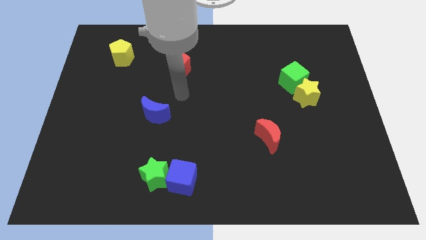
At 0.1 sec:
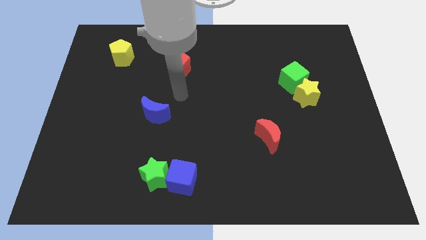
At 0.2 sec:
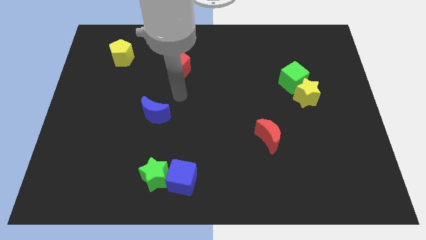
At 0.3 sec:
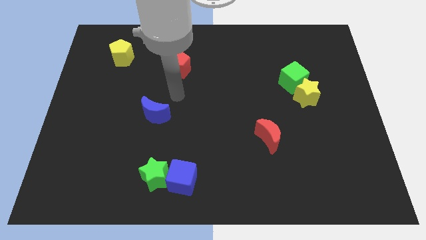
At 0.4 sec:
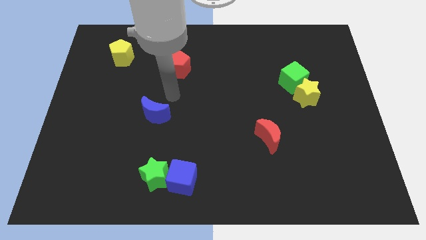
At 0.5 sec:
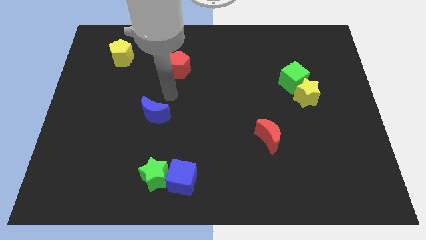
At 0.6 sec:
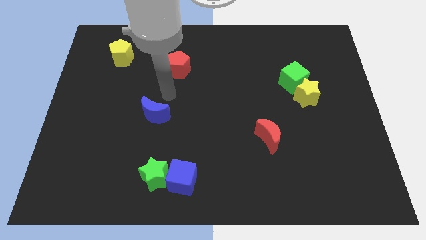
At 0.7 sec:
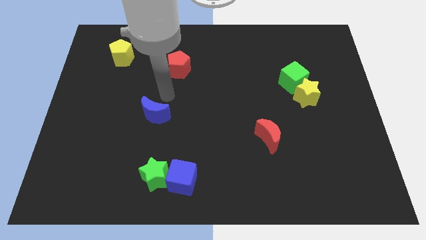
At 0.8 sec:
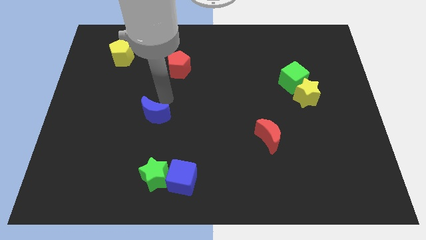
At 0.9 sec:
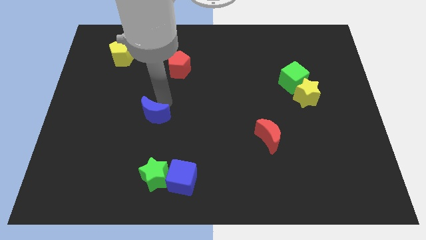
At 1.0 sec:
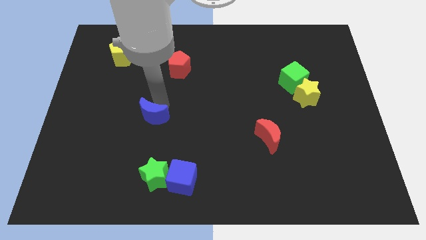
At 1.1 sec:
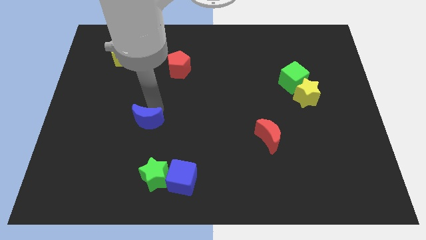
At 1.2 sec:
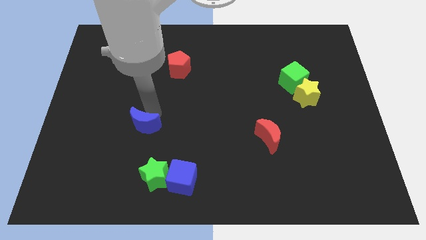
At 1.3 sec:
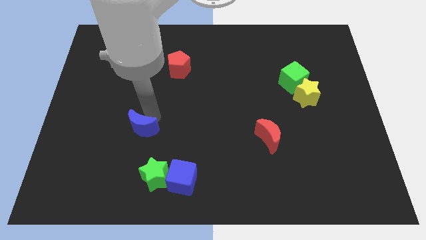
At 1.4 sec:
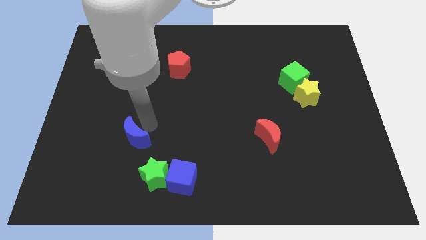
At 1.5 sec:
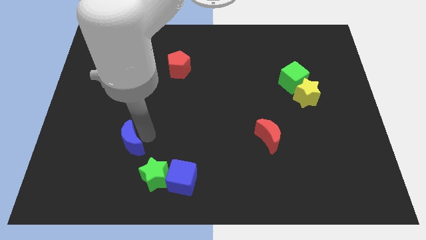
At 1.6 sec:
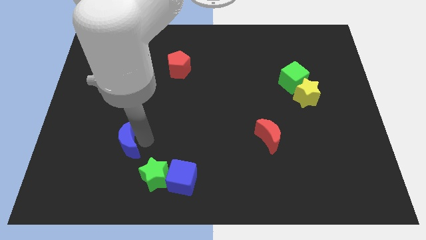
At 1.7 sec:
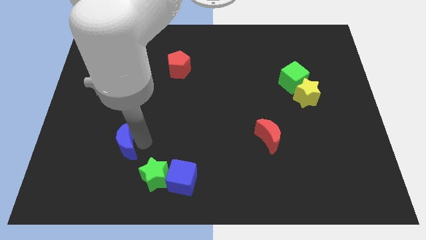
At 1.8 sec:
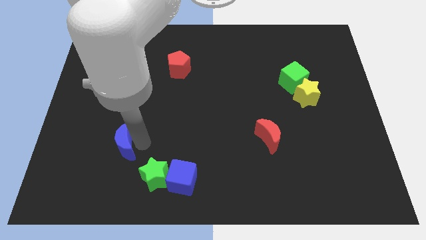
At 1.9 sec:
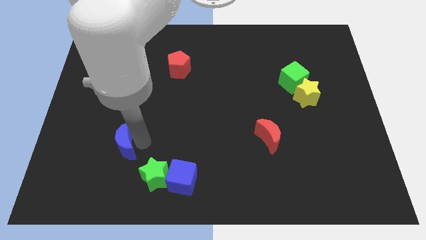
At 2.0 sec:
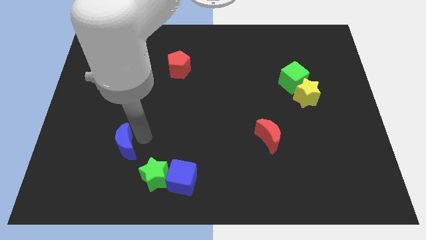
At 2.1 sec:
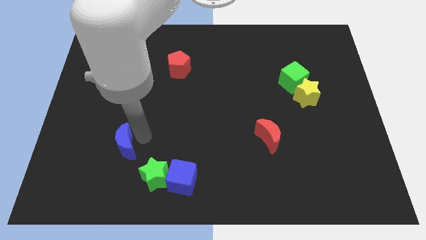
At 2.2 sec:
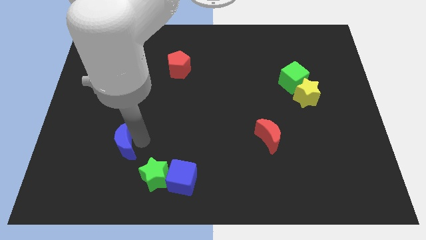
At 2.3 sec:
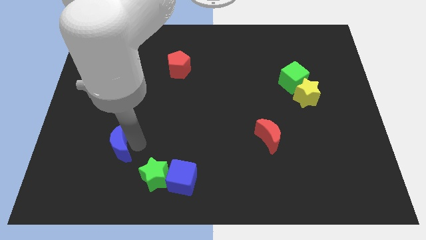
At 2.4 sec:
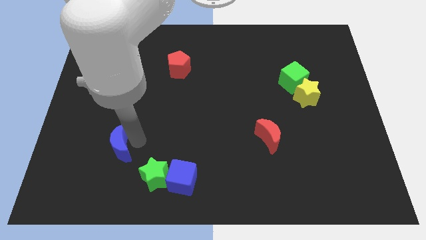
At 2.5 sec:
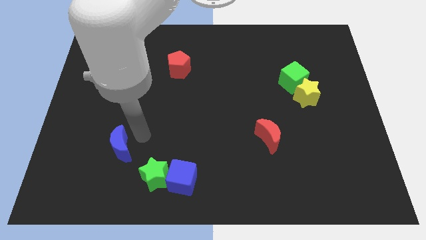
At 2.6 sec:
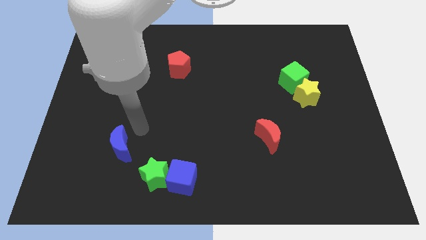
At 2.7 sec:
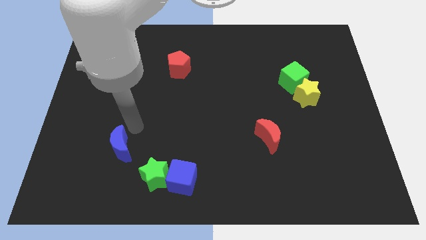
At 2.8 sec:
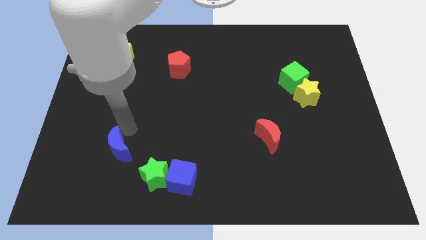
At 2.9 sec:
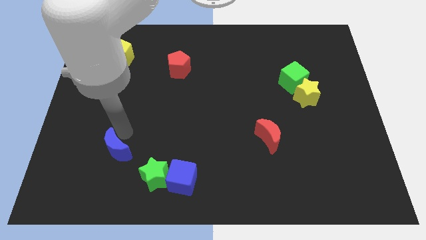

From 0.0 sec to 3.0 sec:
move blue moon slightly to the bottom side of the board

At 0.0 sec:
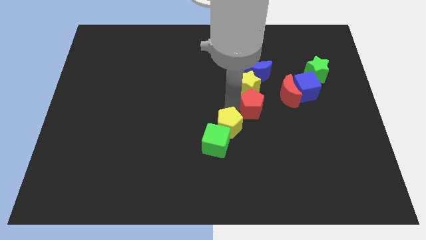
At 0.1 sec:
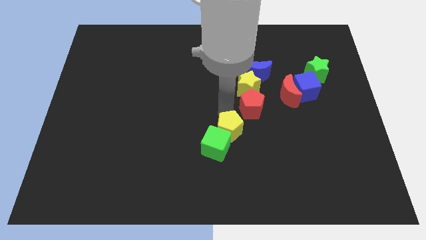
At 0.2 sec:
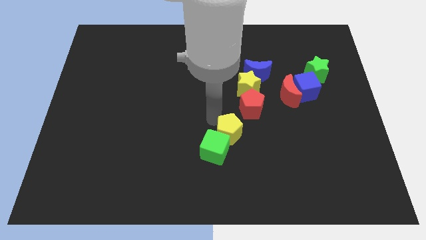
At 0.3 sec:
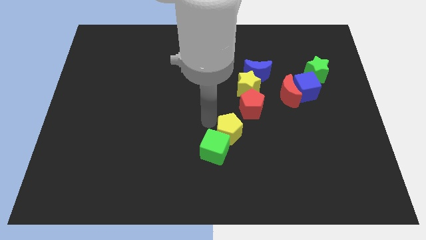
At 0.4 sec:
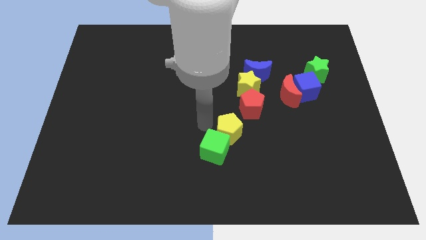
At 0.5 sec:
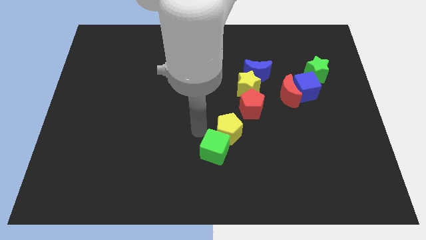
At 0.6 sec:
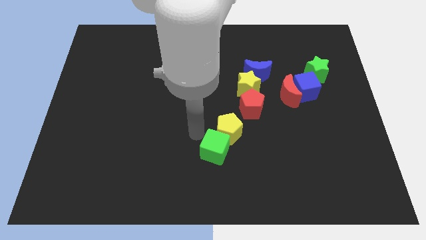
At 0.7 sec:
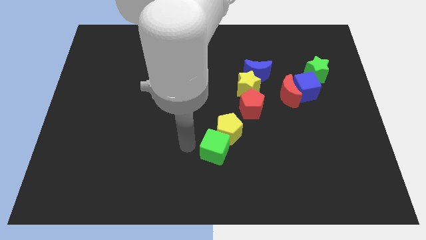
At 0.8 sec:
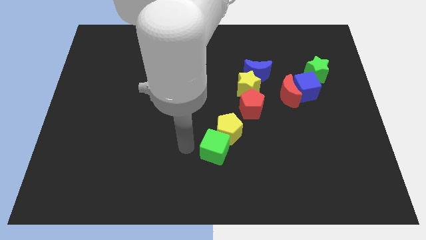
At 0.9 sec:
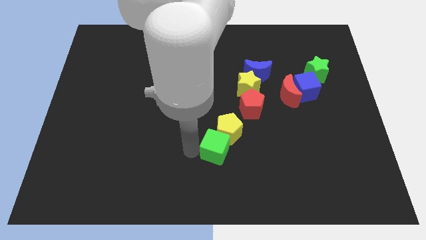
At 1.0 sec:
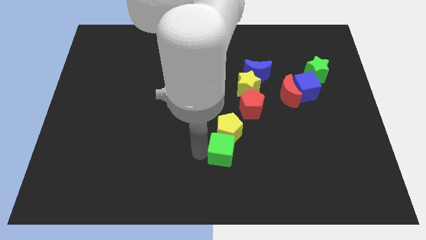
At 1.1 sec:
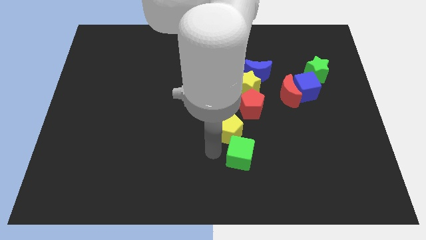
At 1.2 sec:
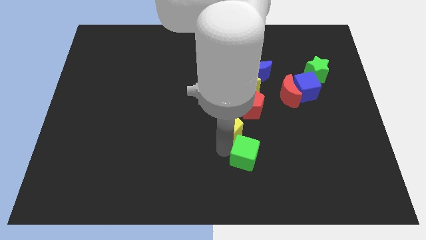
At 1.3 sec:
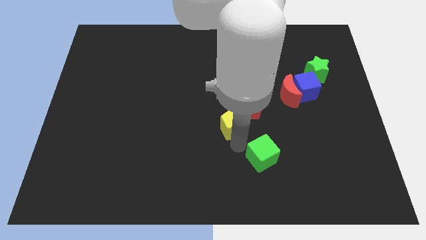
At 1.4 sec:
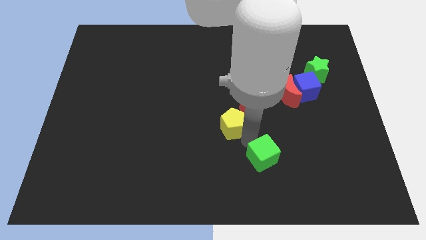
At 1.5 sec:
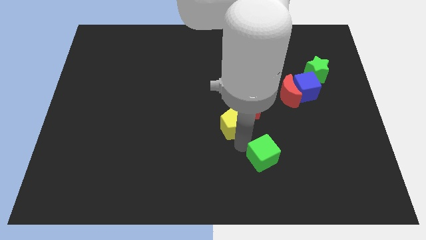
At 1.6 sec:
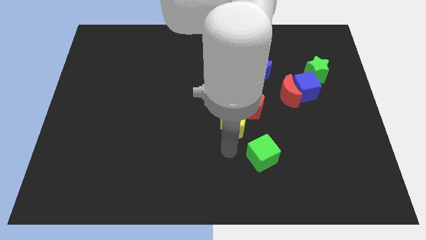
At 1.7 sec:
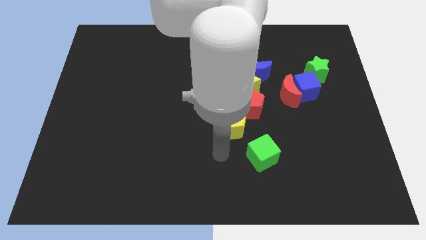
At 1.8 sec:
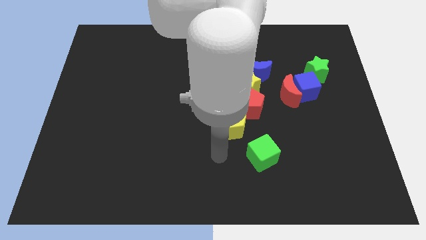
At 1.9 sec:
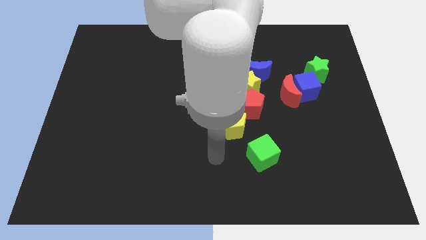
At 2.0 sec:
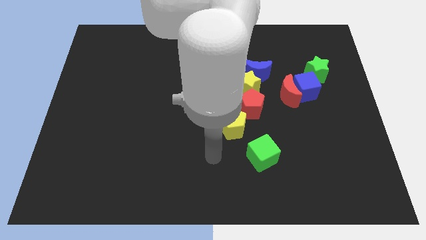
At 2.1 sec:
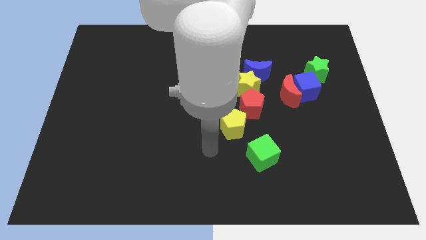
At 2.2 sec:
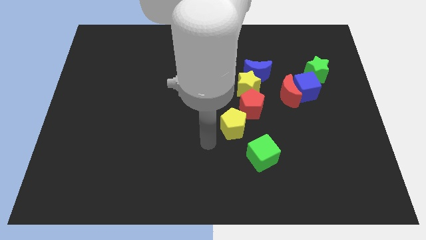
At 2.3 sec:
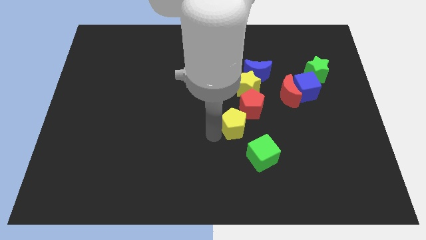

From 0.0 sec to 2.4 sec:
place the green cube diagonally below the yellow pentagon

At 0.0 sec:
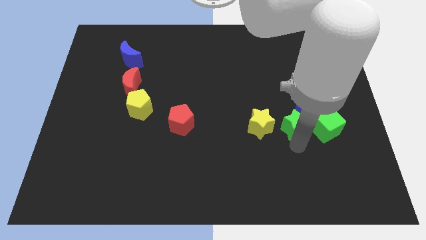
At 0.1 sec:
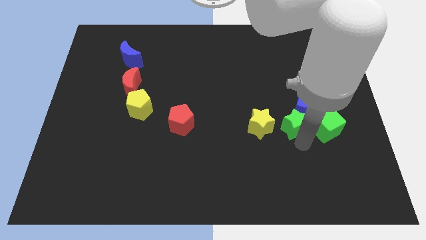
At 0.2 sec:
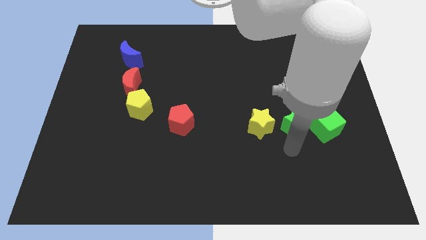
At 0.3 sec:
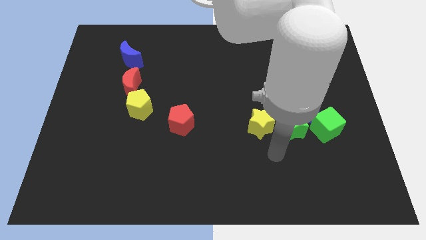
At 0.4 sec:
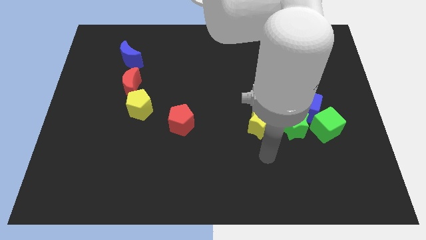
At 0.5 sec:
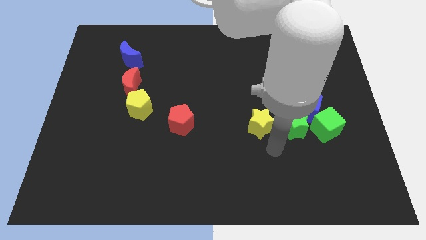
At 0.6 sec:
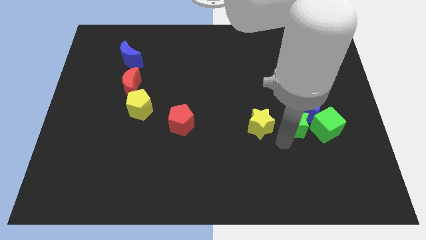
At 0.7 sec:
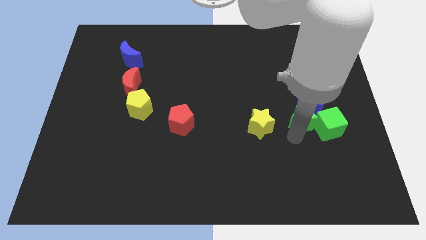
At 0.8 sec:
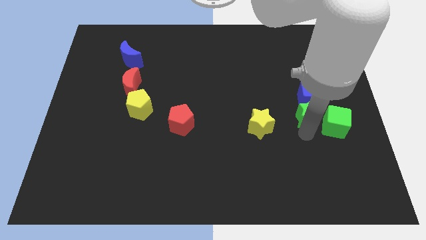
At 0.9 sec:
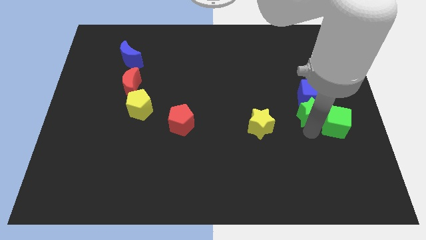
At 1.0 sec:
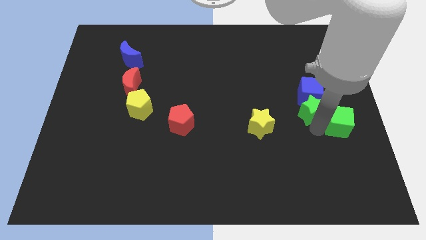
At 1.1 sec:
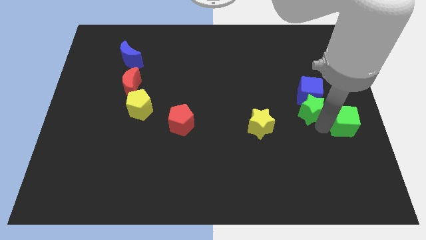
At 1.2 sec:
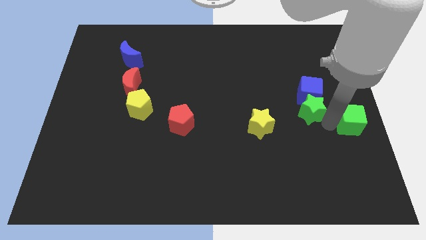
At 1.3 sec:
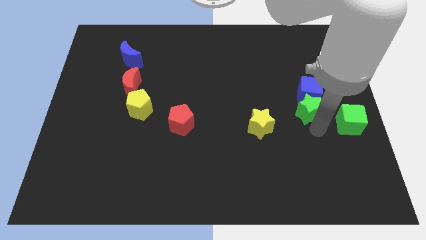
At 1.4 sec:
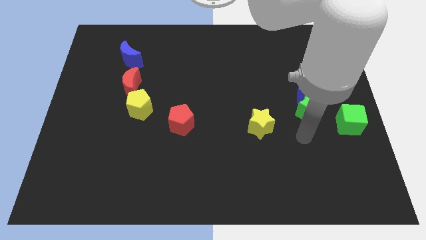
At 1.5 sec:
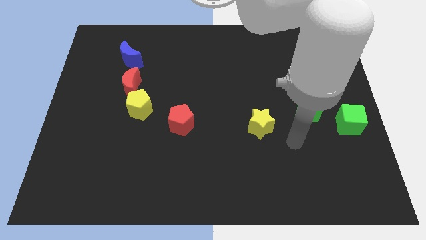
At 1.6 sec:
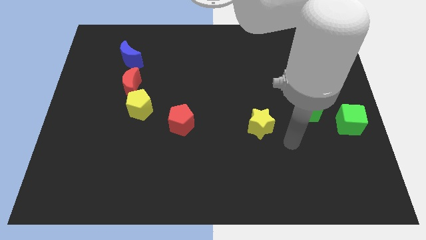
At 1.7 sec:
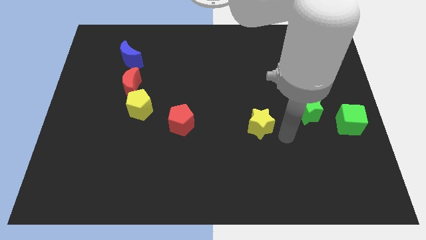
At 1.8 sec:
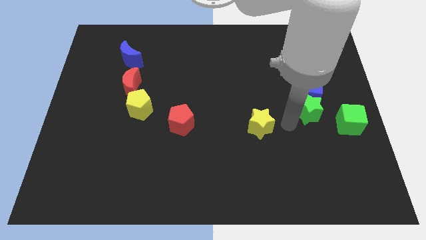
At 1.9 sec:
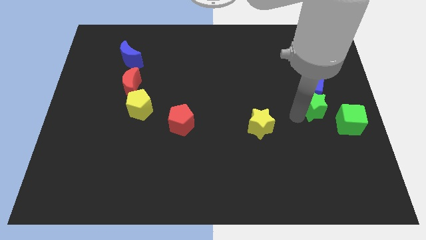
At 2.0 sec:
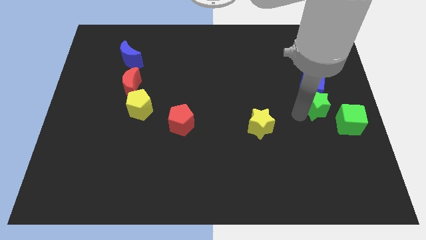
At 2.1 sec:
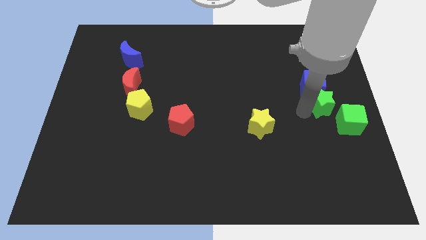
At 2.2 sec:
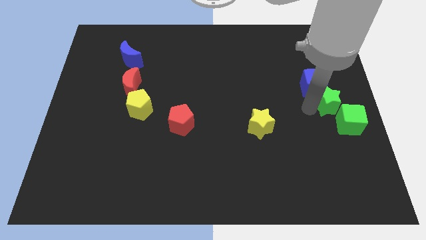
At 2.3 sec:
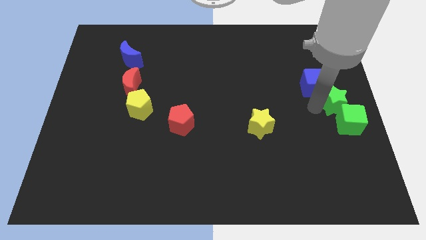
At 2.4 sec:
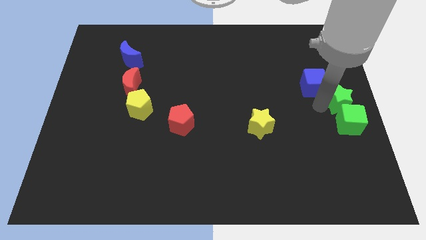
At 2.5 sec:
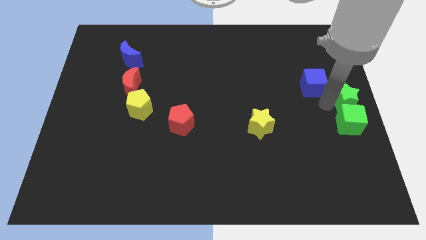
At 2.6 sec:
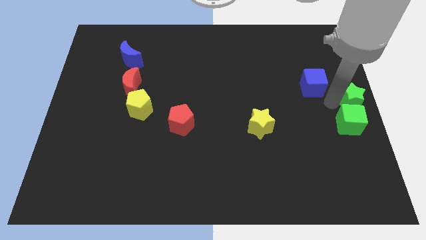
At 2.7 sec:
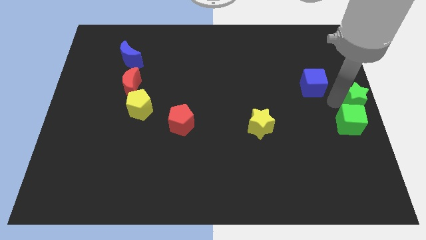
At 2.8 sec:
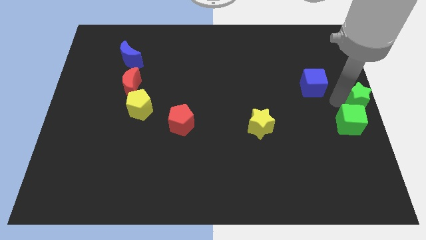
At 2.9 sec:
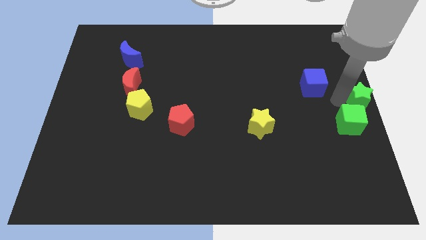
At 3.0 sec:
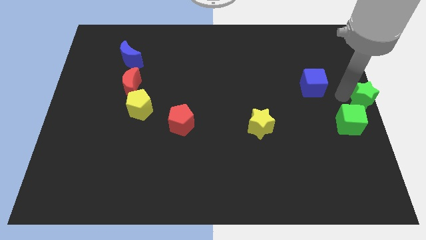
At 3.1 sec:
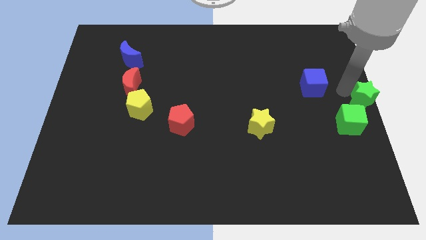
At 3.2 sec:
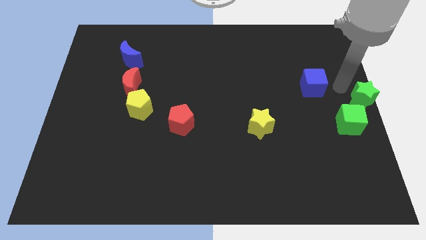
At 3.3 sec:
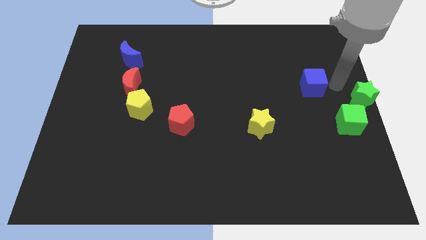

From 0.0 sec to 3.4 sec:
place green star diagonally right above green cube

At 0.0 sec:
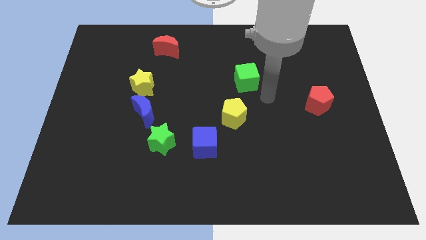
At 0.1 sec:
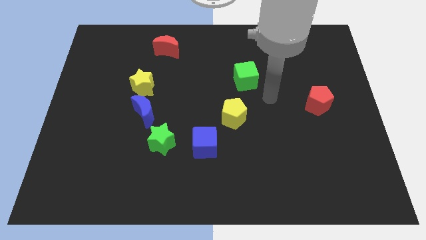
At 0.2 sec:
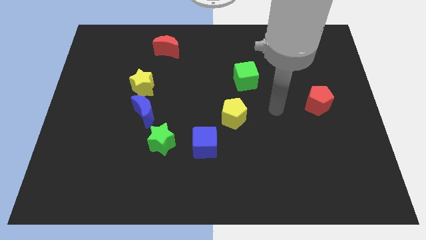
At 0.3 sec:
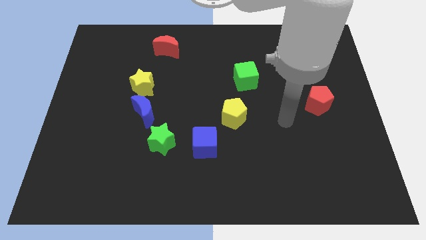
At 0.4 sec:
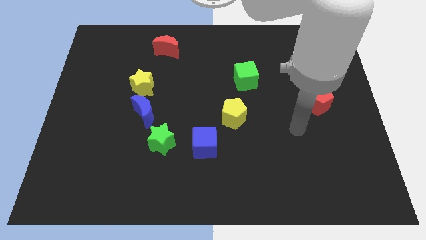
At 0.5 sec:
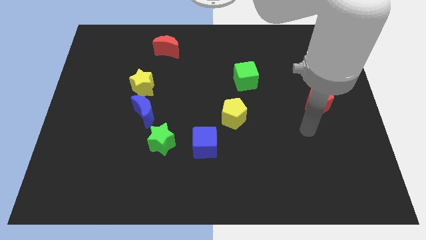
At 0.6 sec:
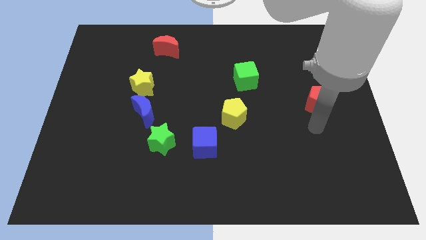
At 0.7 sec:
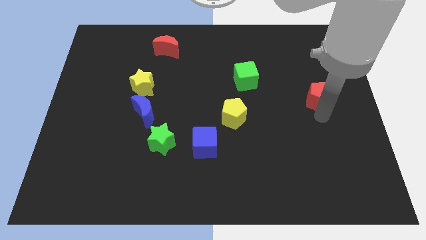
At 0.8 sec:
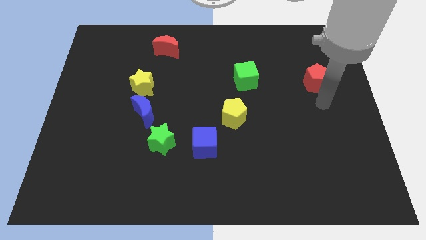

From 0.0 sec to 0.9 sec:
move your hand to the bottom of the red pentagon
